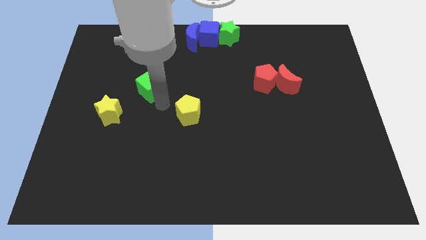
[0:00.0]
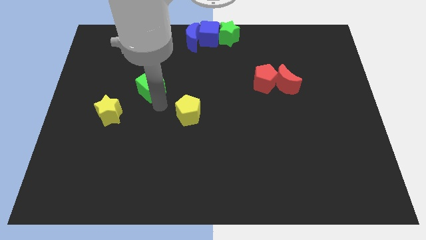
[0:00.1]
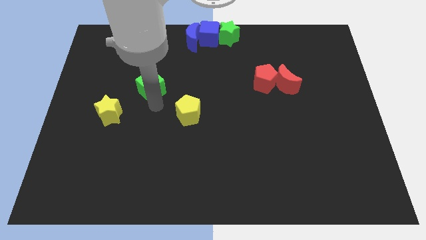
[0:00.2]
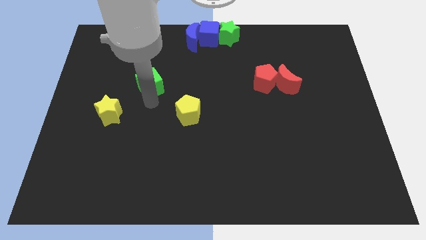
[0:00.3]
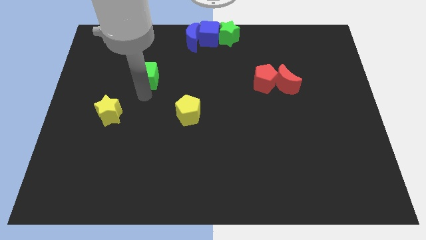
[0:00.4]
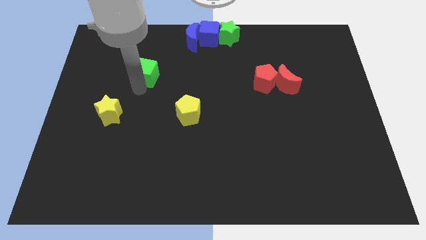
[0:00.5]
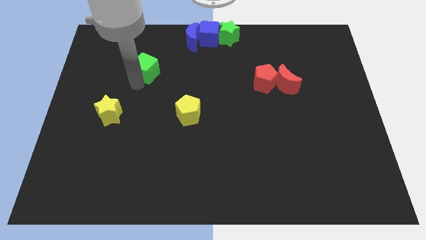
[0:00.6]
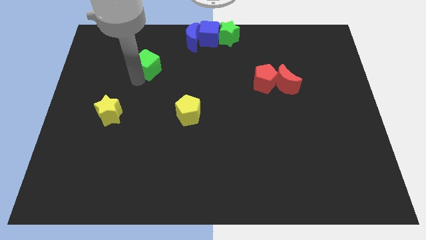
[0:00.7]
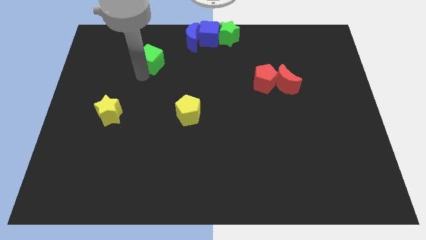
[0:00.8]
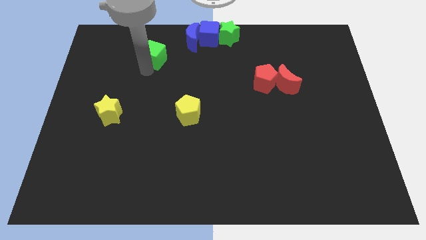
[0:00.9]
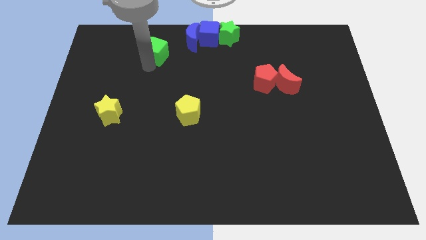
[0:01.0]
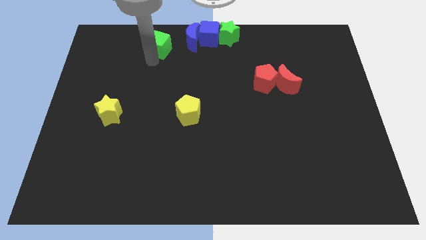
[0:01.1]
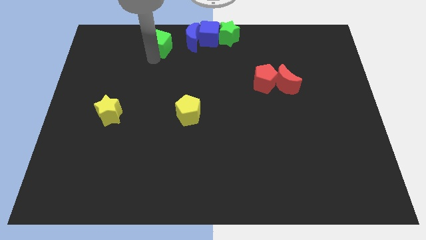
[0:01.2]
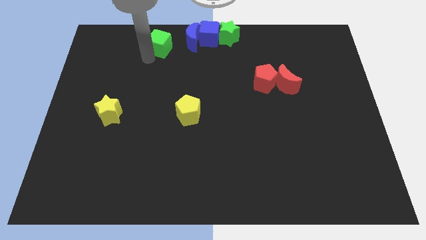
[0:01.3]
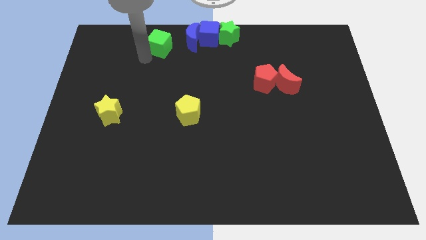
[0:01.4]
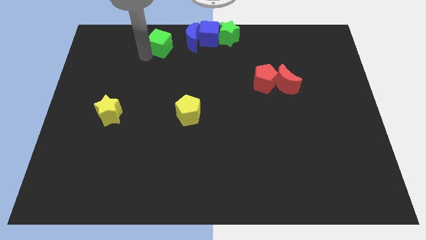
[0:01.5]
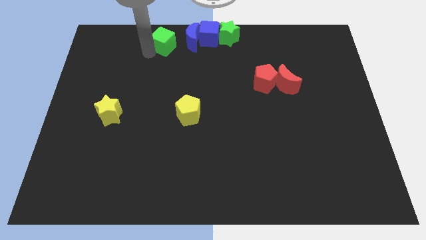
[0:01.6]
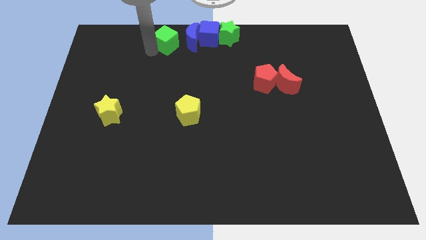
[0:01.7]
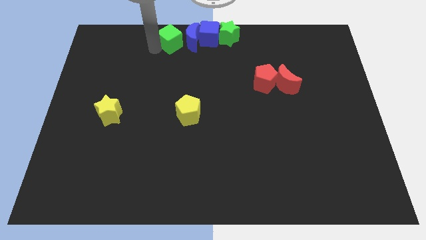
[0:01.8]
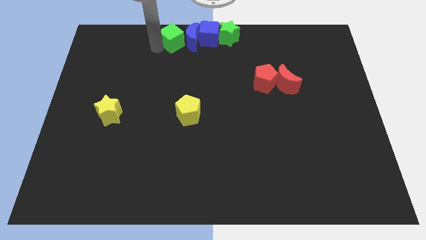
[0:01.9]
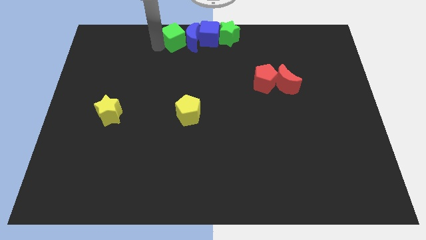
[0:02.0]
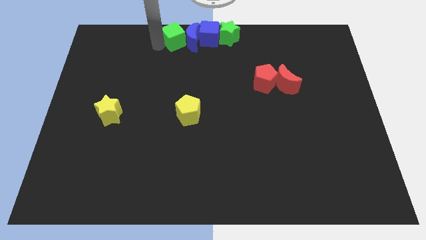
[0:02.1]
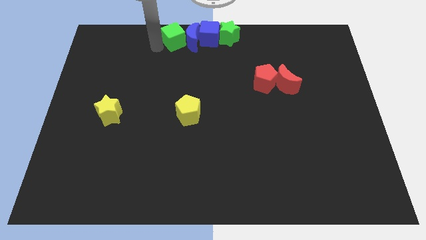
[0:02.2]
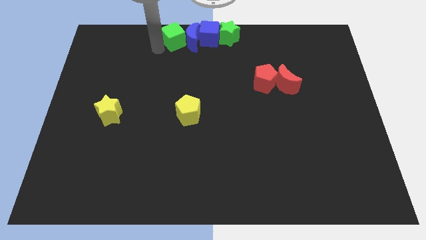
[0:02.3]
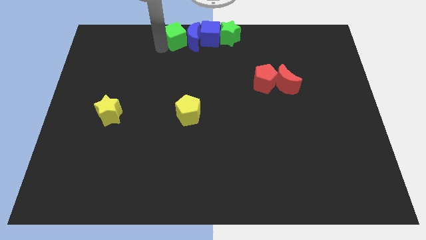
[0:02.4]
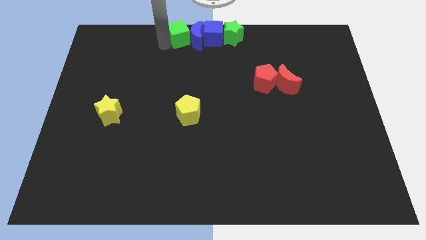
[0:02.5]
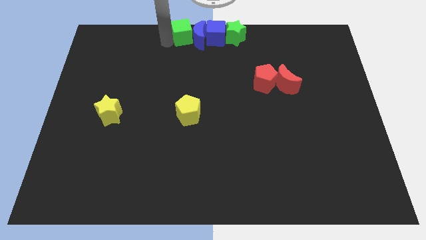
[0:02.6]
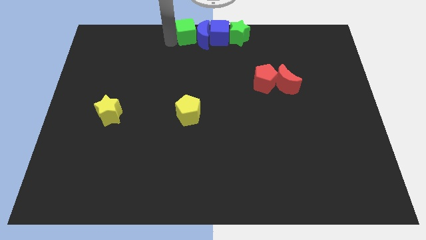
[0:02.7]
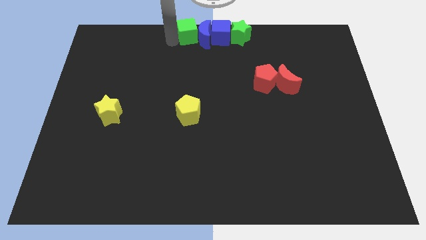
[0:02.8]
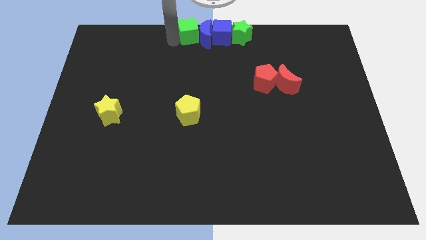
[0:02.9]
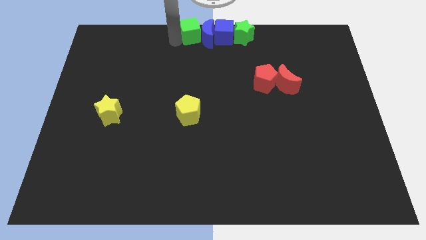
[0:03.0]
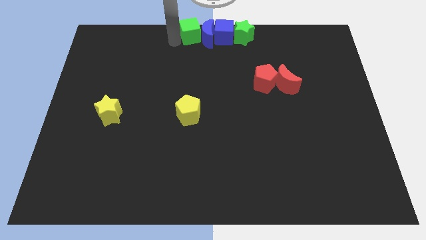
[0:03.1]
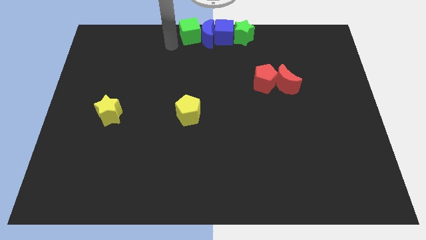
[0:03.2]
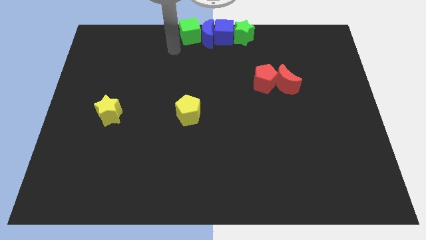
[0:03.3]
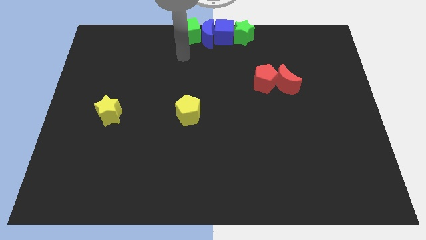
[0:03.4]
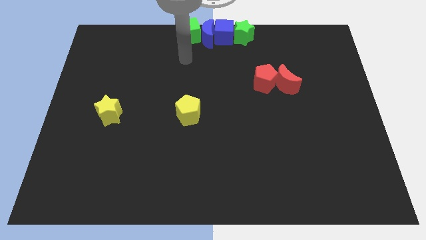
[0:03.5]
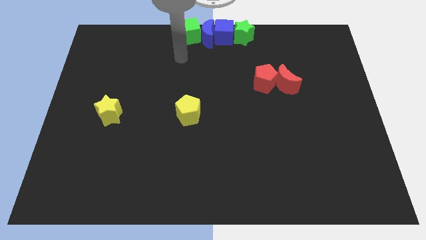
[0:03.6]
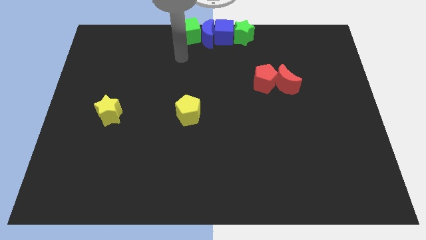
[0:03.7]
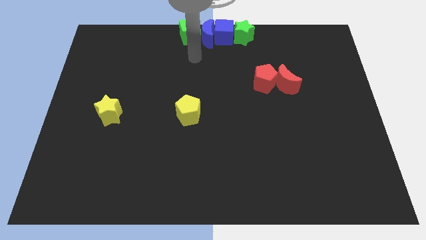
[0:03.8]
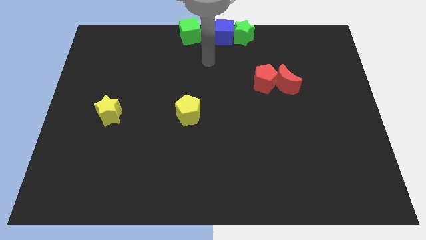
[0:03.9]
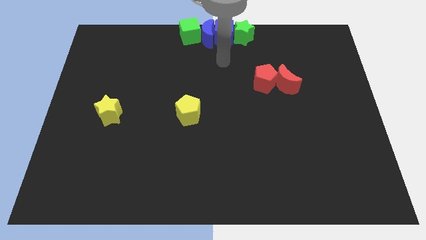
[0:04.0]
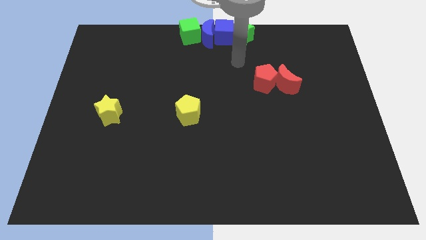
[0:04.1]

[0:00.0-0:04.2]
move the green cube to the left of the blue crescent

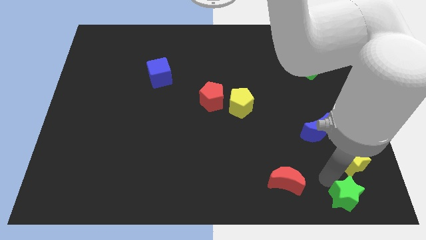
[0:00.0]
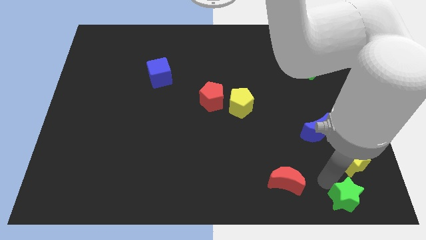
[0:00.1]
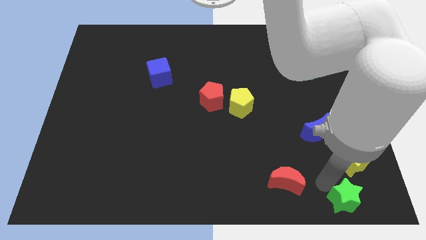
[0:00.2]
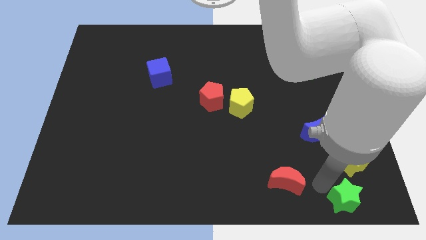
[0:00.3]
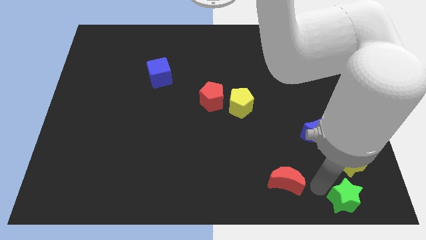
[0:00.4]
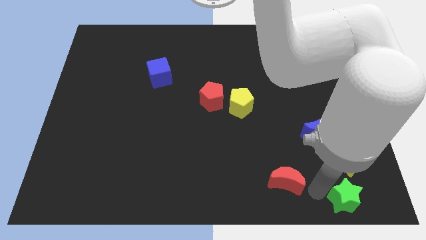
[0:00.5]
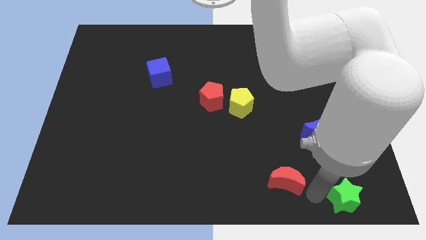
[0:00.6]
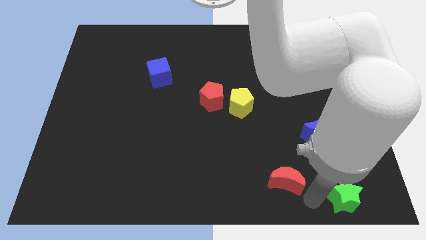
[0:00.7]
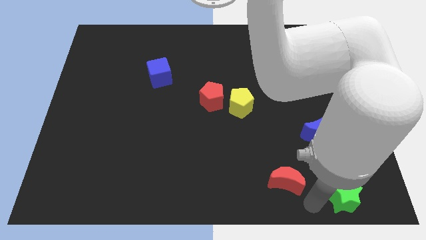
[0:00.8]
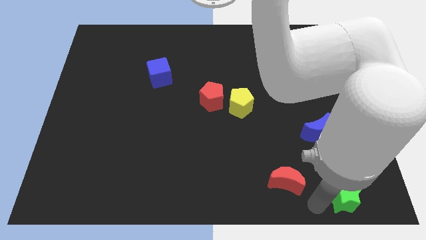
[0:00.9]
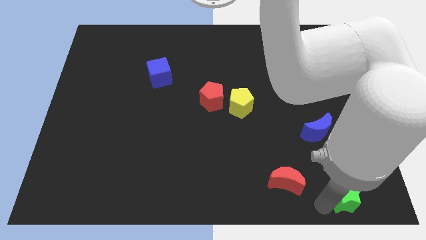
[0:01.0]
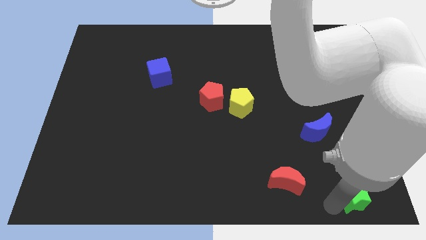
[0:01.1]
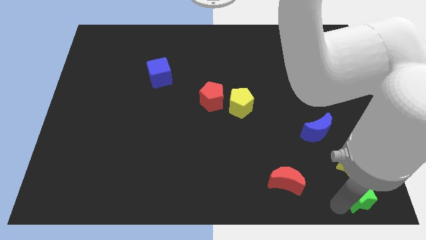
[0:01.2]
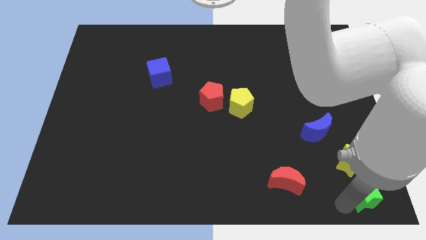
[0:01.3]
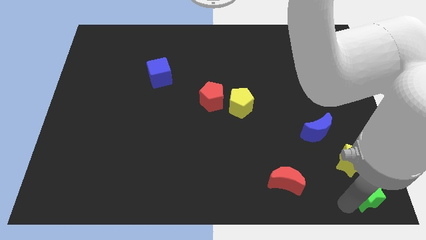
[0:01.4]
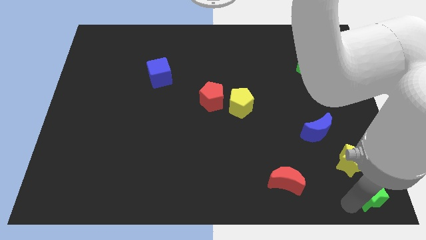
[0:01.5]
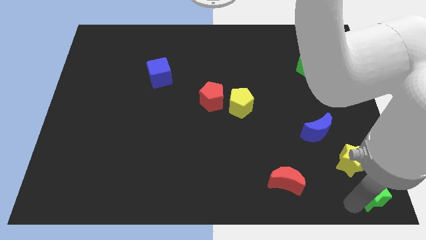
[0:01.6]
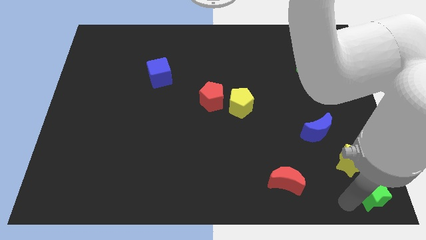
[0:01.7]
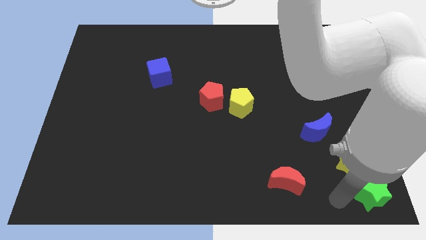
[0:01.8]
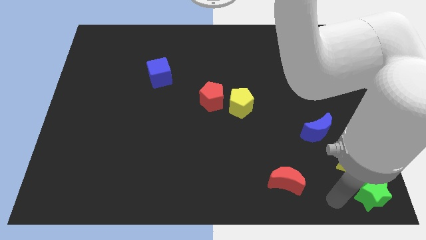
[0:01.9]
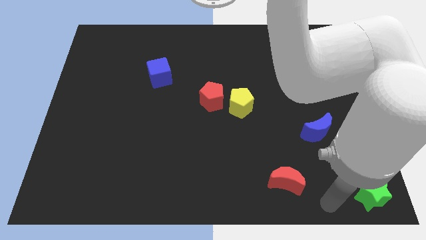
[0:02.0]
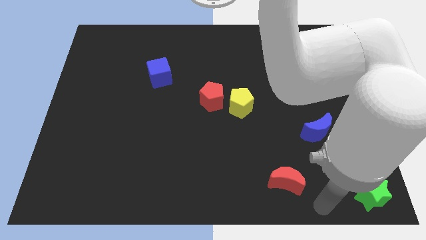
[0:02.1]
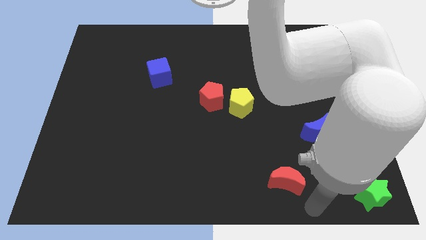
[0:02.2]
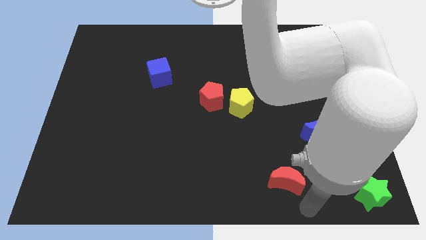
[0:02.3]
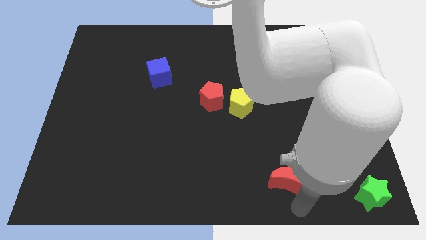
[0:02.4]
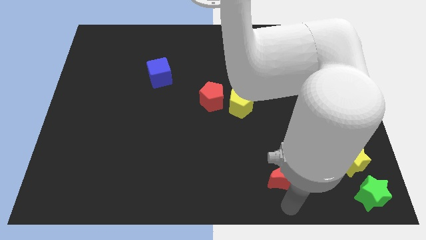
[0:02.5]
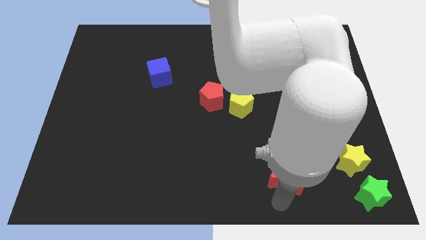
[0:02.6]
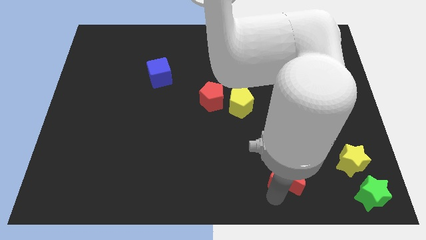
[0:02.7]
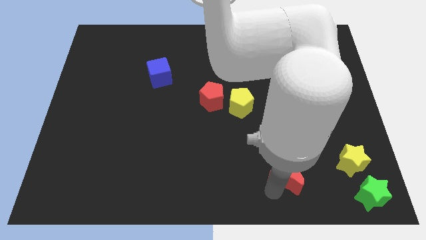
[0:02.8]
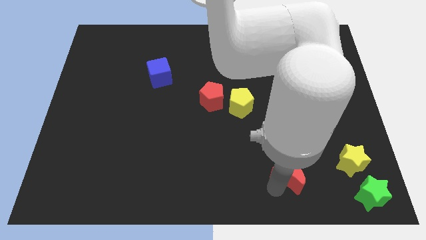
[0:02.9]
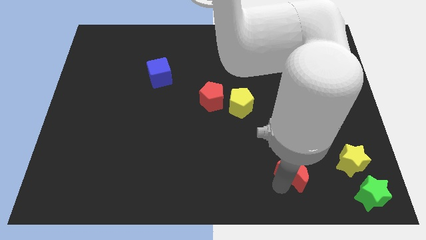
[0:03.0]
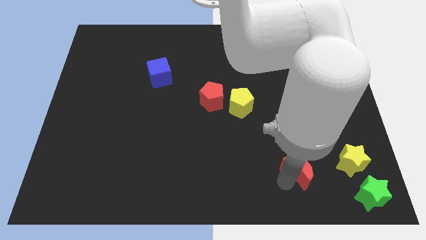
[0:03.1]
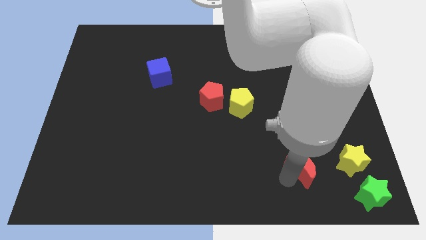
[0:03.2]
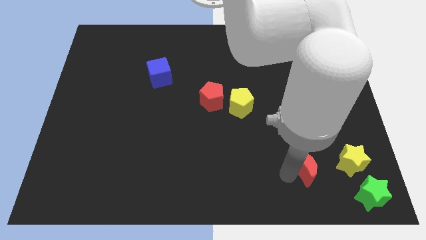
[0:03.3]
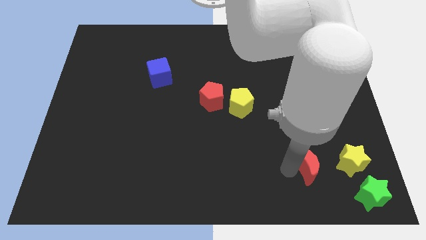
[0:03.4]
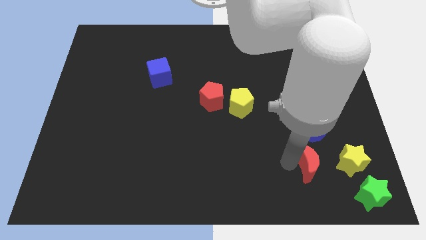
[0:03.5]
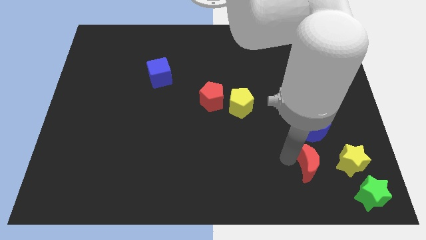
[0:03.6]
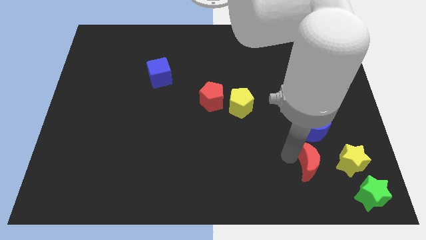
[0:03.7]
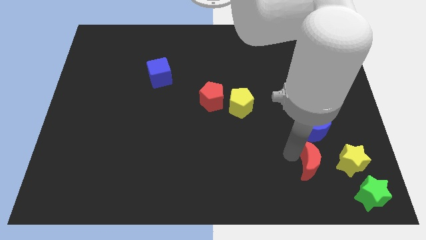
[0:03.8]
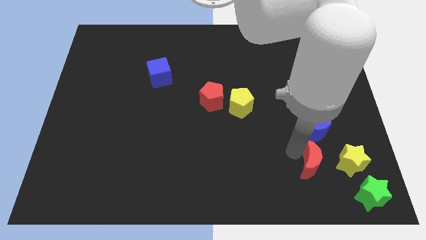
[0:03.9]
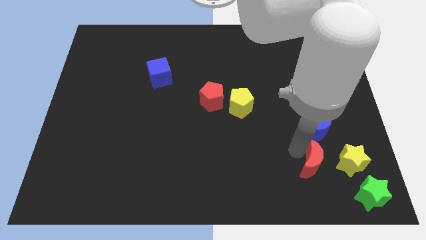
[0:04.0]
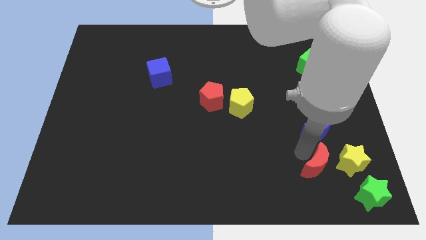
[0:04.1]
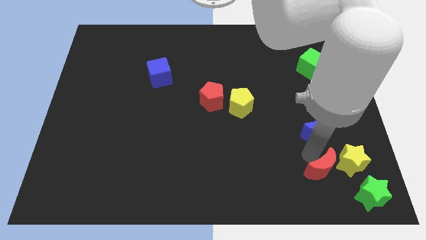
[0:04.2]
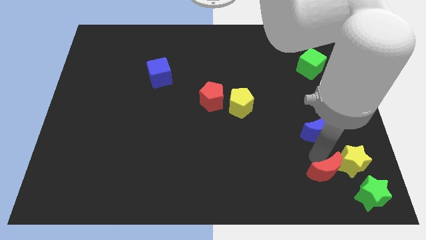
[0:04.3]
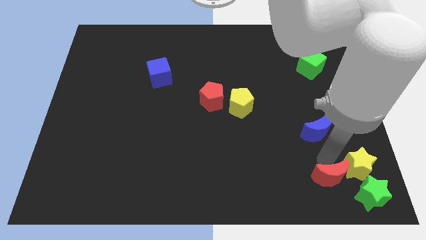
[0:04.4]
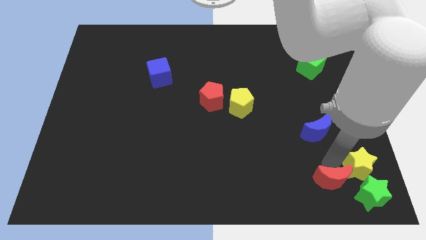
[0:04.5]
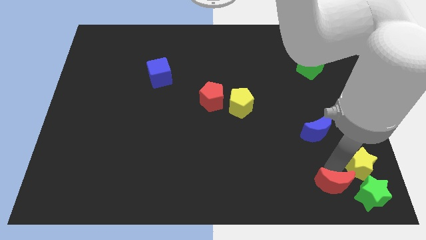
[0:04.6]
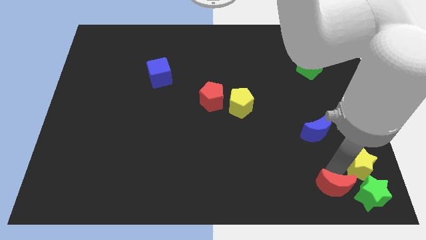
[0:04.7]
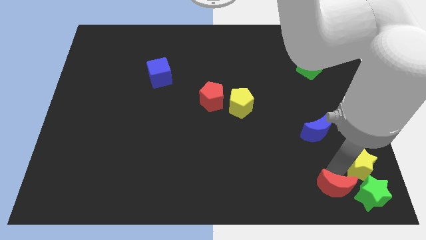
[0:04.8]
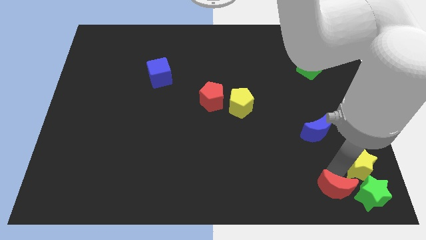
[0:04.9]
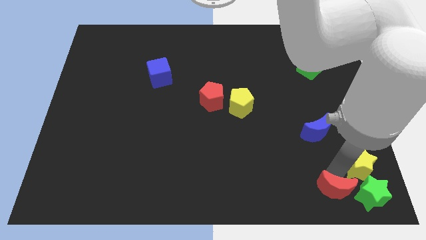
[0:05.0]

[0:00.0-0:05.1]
move the green star and red crescent to the bottom right corner of the board
